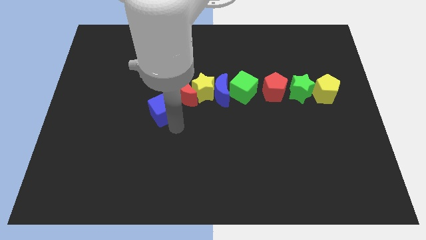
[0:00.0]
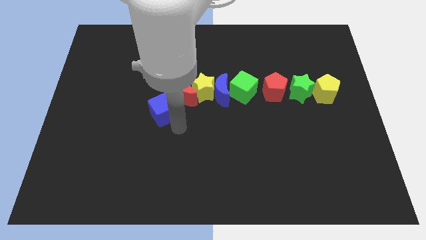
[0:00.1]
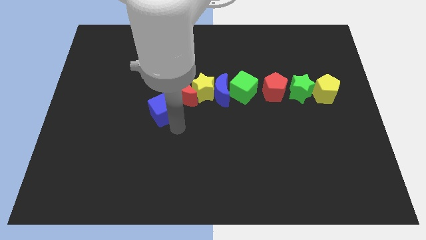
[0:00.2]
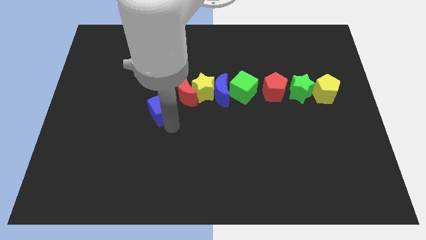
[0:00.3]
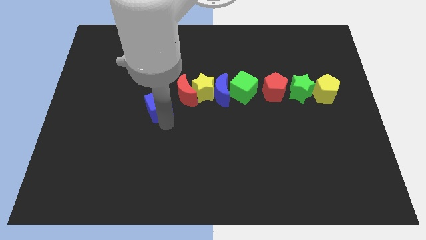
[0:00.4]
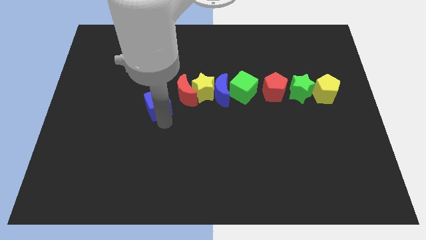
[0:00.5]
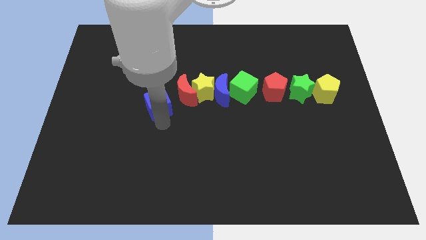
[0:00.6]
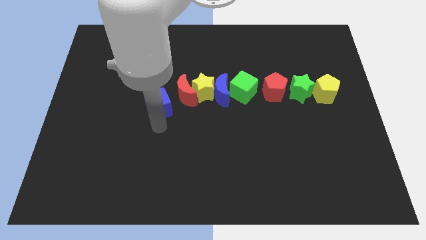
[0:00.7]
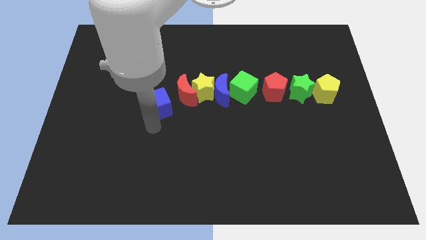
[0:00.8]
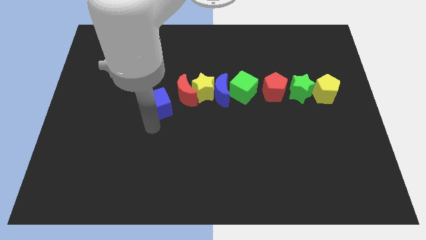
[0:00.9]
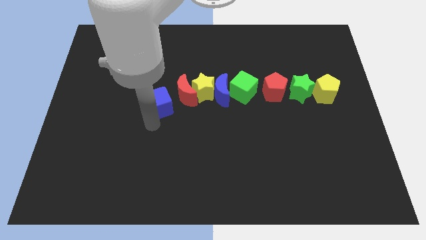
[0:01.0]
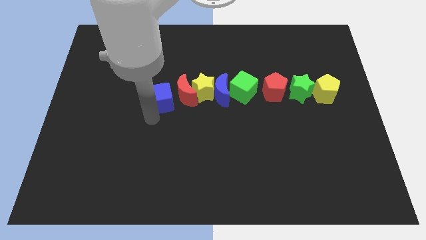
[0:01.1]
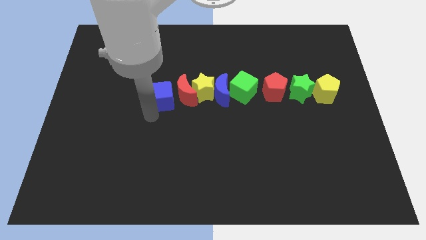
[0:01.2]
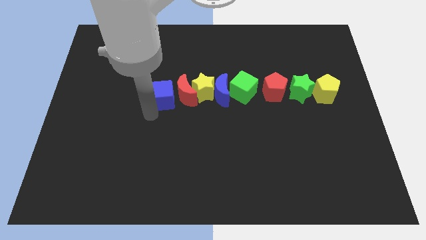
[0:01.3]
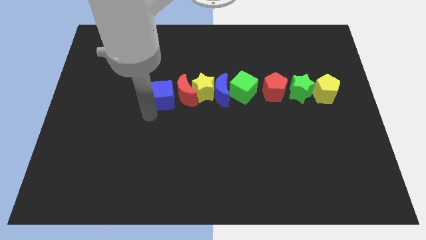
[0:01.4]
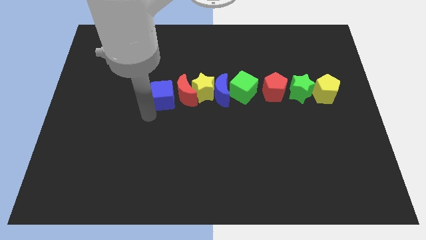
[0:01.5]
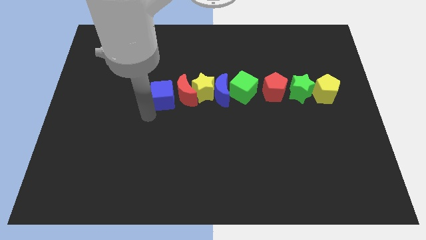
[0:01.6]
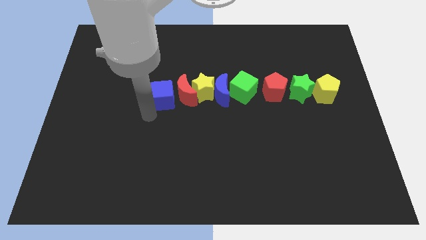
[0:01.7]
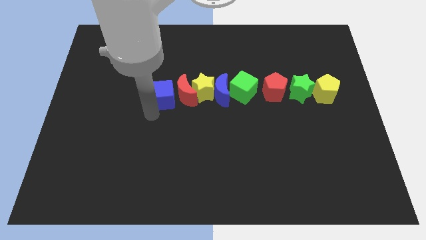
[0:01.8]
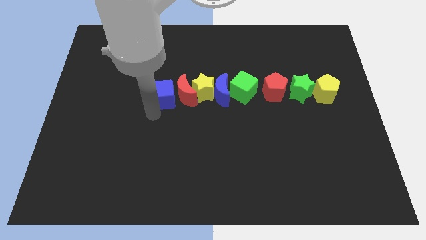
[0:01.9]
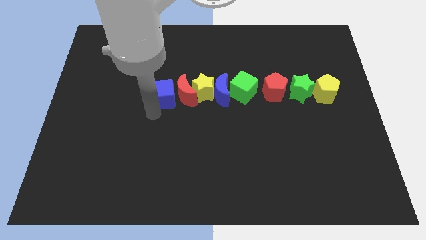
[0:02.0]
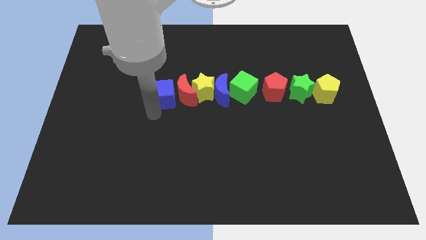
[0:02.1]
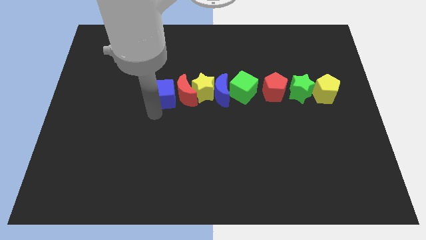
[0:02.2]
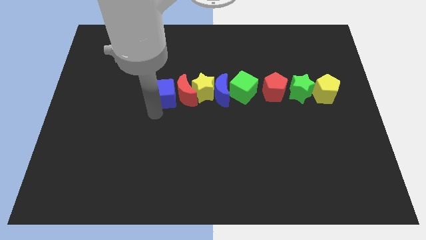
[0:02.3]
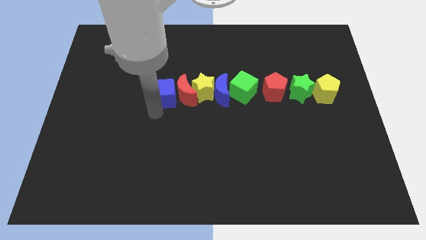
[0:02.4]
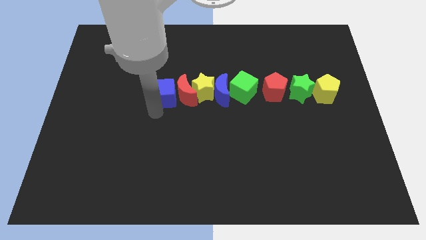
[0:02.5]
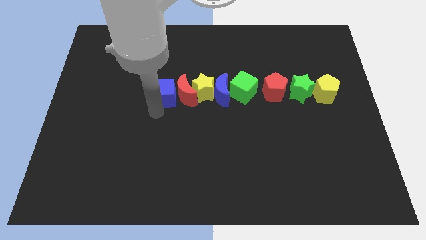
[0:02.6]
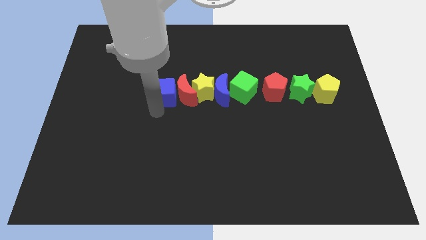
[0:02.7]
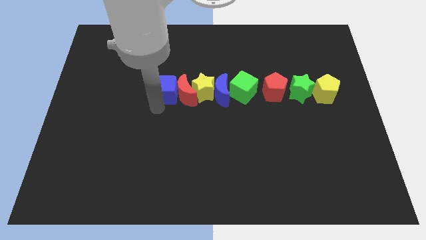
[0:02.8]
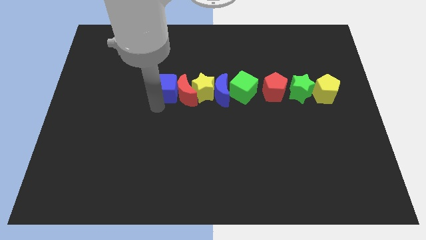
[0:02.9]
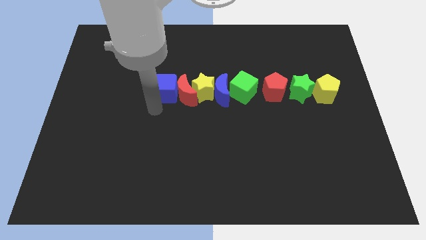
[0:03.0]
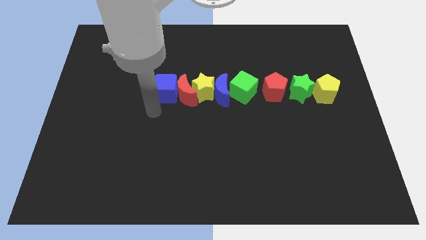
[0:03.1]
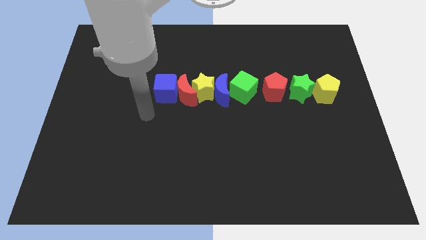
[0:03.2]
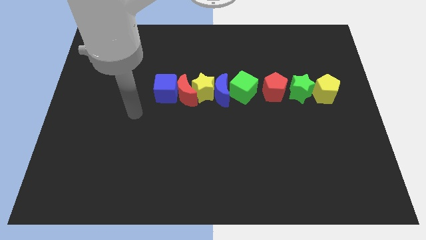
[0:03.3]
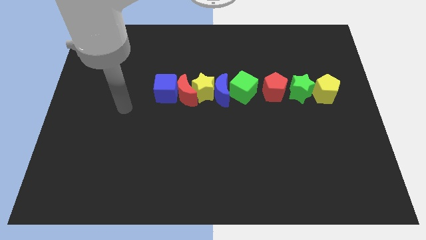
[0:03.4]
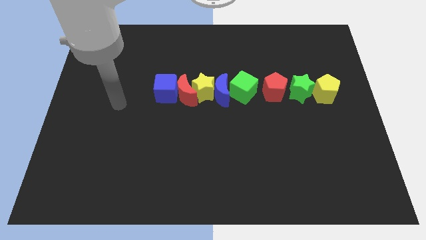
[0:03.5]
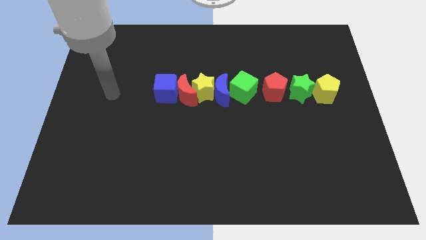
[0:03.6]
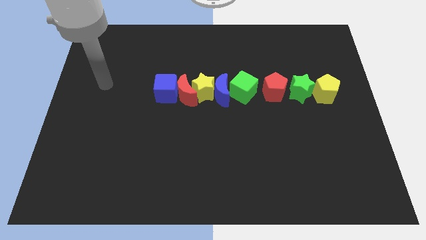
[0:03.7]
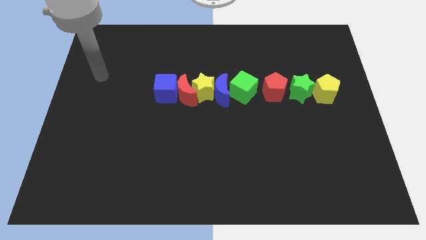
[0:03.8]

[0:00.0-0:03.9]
place the blue cube into the red crescent

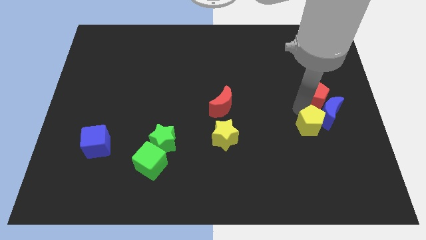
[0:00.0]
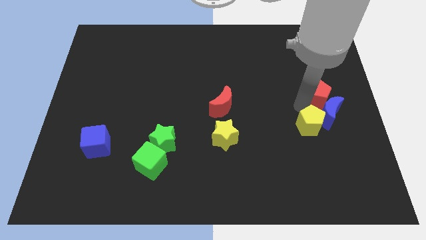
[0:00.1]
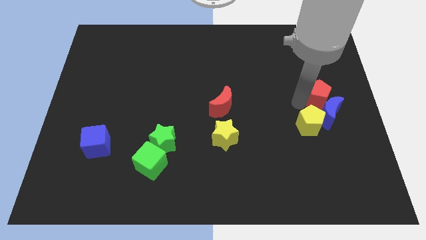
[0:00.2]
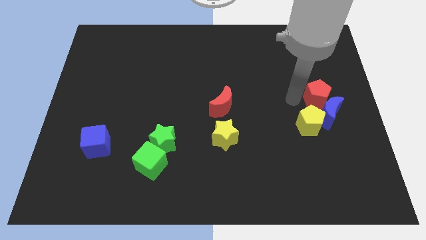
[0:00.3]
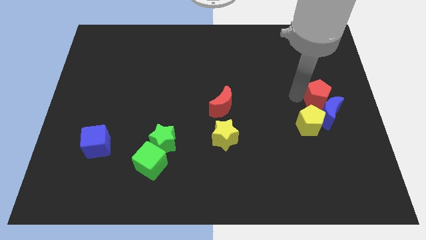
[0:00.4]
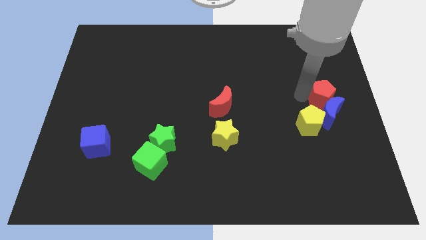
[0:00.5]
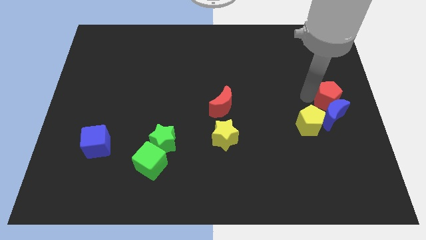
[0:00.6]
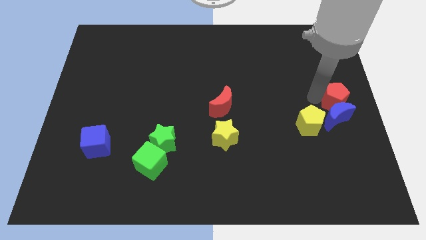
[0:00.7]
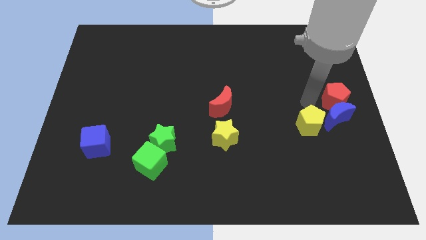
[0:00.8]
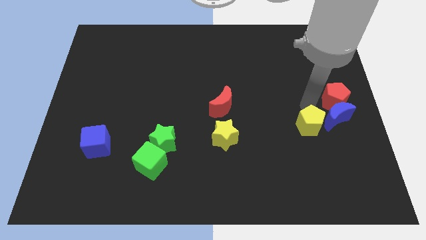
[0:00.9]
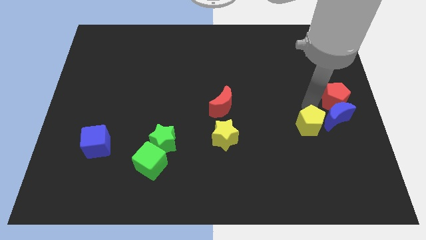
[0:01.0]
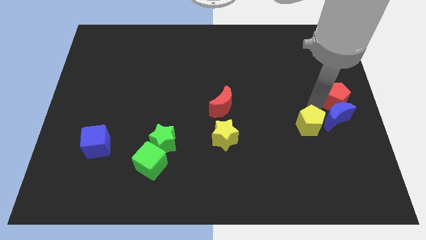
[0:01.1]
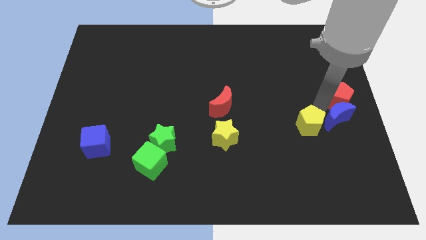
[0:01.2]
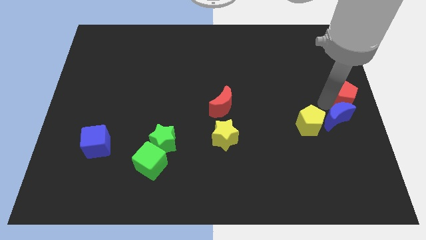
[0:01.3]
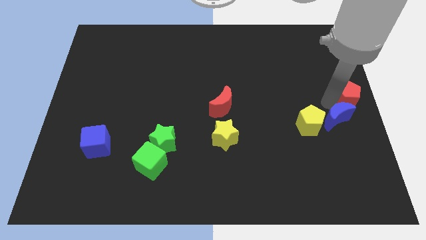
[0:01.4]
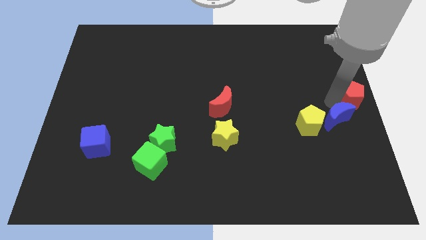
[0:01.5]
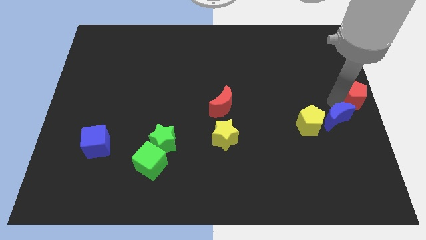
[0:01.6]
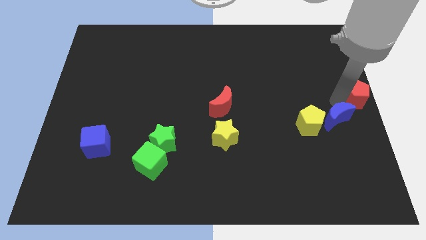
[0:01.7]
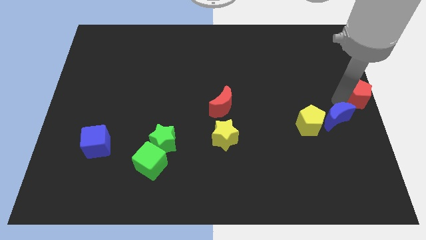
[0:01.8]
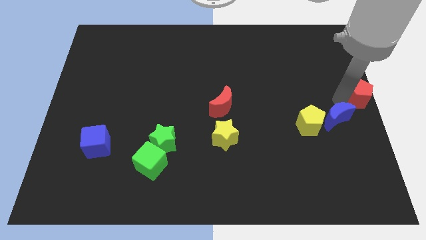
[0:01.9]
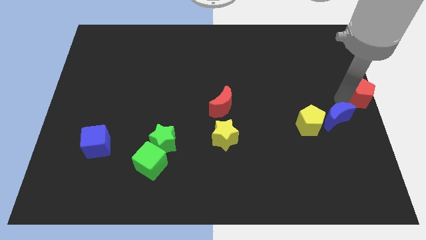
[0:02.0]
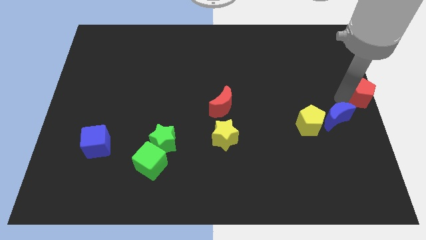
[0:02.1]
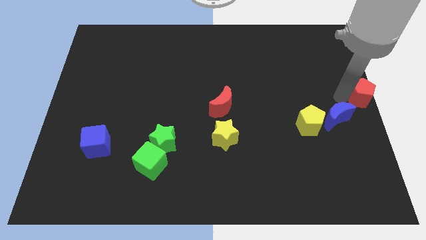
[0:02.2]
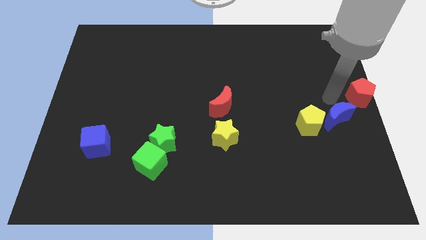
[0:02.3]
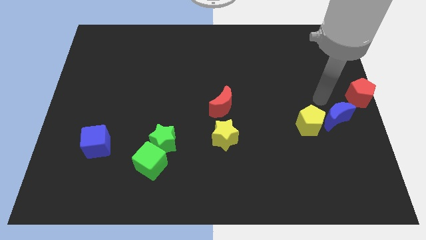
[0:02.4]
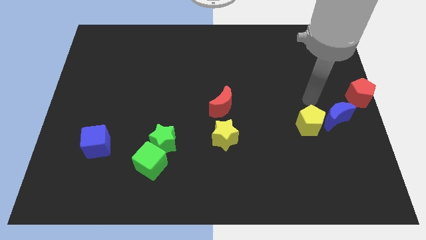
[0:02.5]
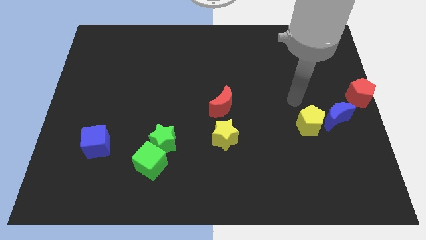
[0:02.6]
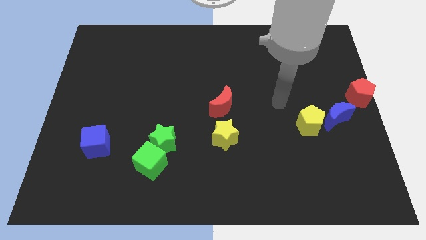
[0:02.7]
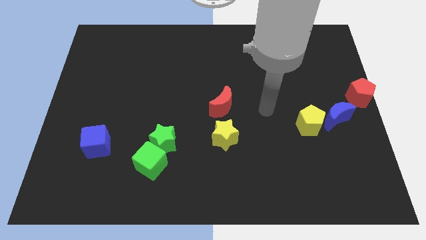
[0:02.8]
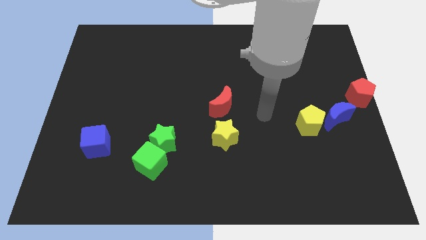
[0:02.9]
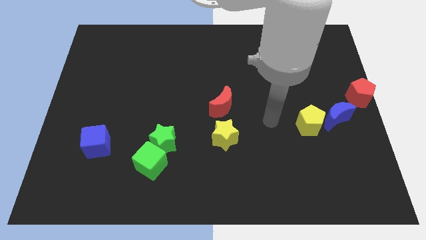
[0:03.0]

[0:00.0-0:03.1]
move the red pentagon to the center right of the board

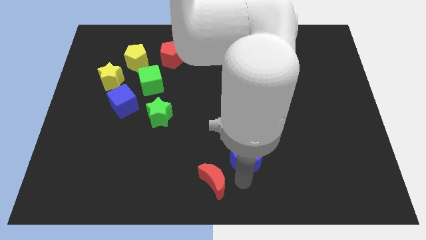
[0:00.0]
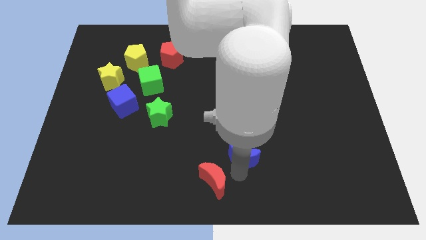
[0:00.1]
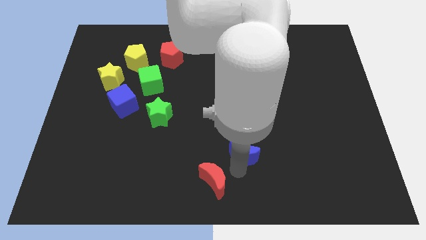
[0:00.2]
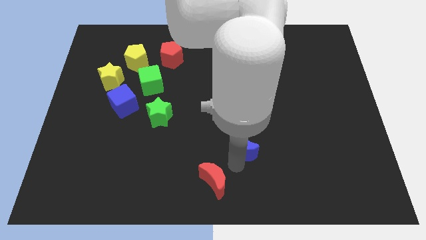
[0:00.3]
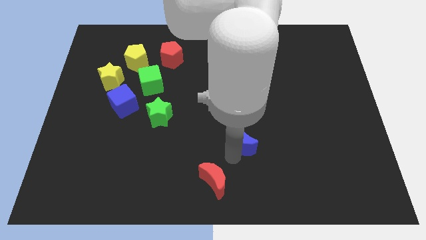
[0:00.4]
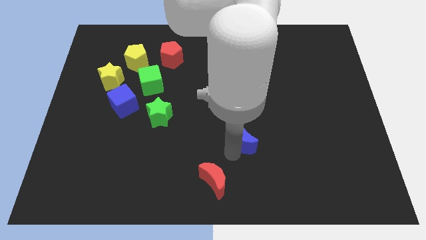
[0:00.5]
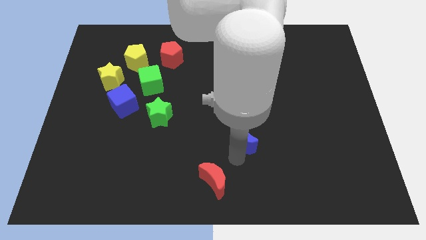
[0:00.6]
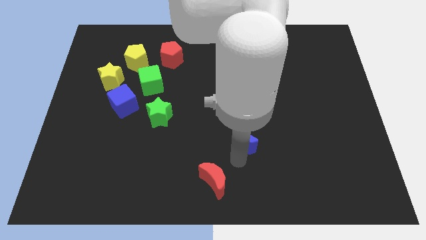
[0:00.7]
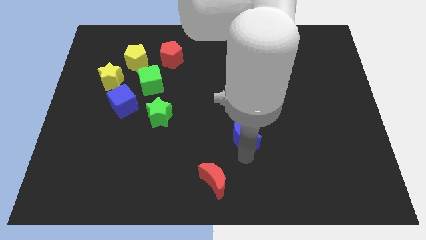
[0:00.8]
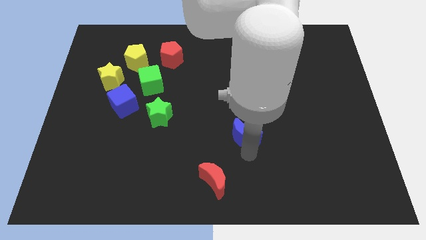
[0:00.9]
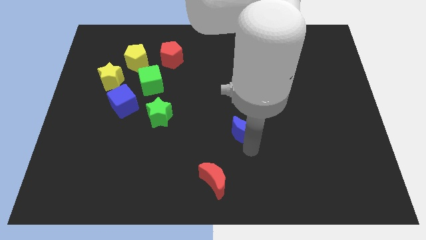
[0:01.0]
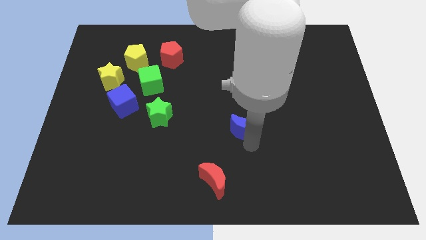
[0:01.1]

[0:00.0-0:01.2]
push the blue moon upward

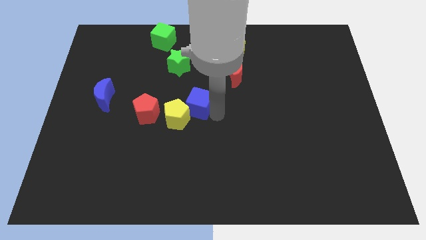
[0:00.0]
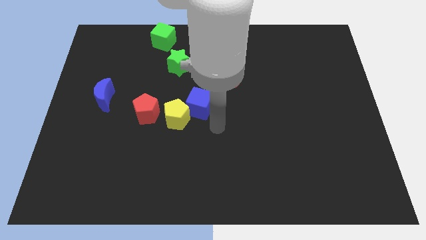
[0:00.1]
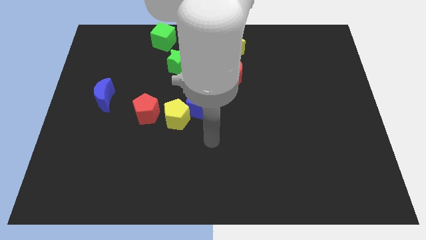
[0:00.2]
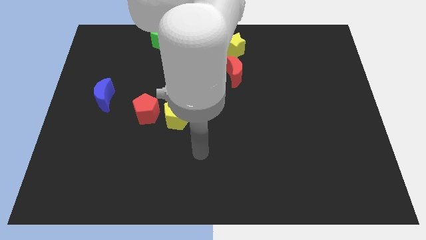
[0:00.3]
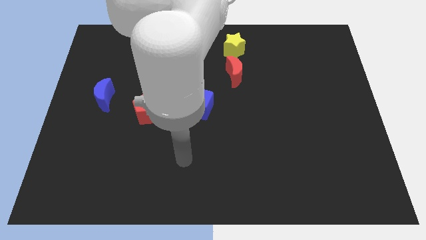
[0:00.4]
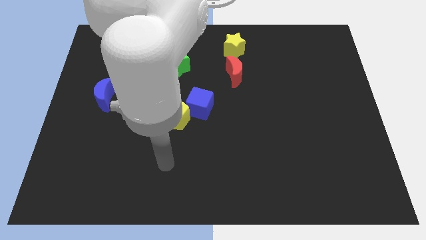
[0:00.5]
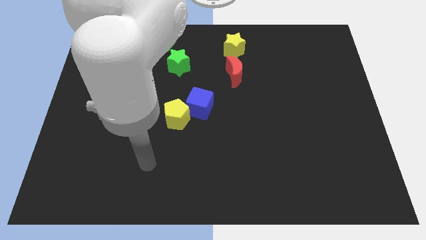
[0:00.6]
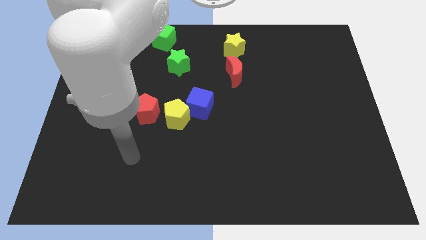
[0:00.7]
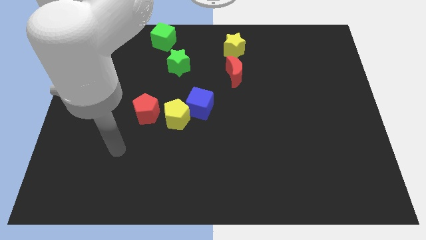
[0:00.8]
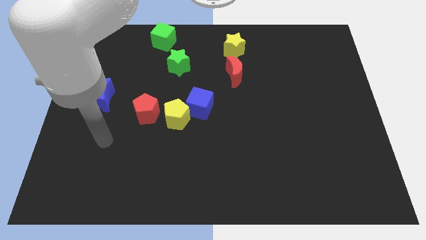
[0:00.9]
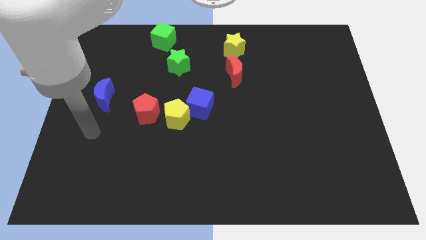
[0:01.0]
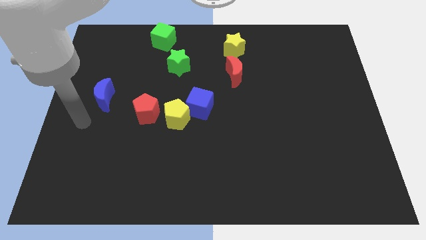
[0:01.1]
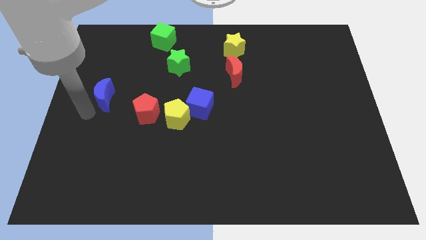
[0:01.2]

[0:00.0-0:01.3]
move your arm away from the blue cube
